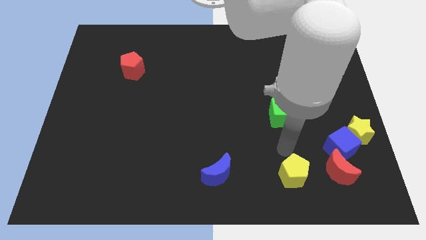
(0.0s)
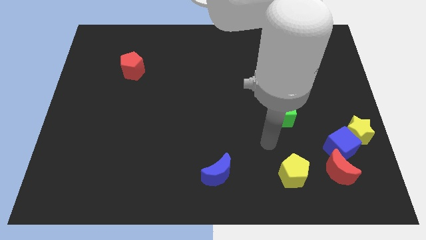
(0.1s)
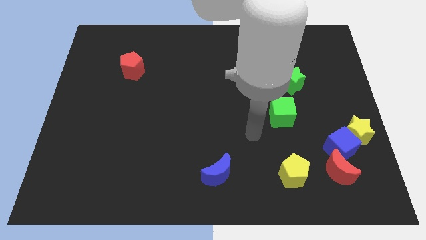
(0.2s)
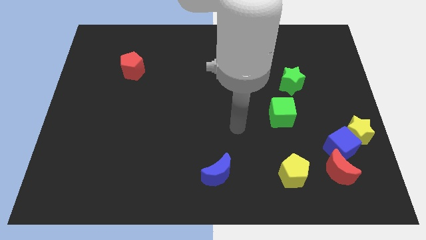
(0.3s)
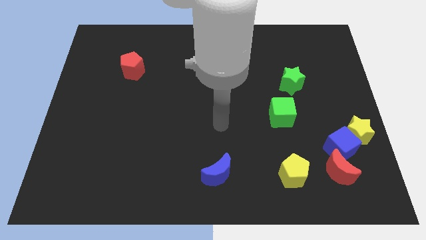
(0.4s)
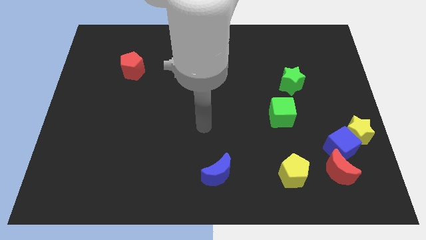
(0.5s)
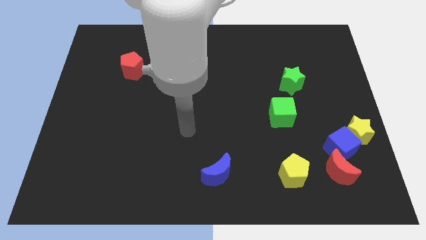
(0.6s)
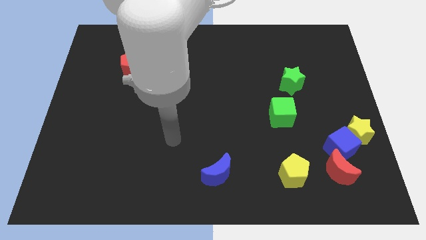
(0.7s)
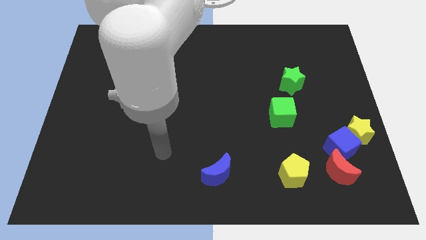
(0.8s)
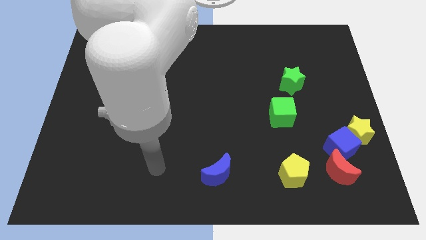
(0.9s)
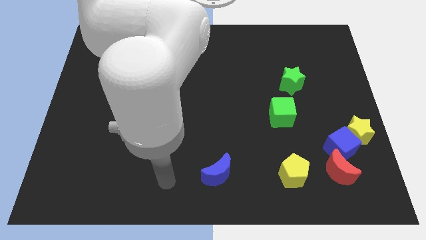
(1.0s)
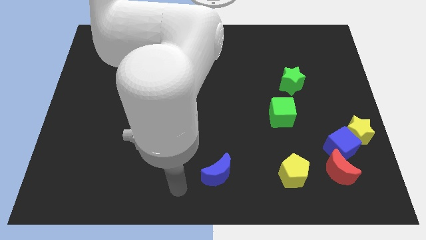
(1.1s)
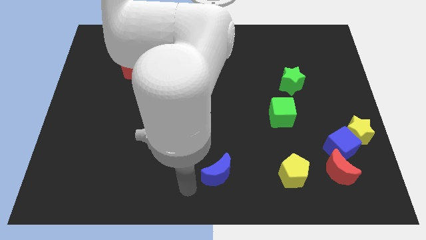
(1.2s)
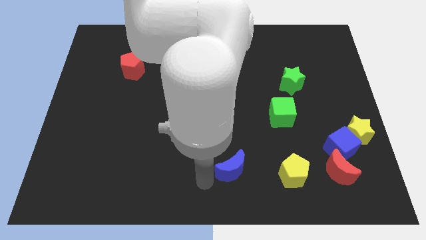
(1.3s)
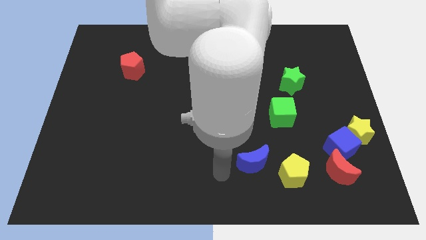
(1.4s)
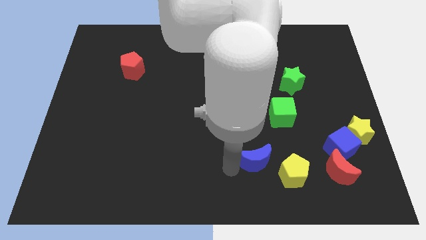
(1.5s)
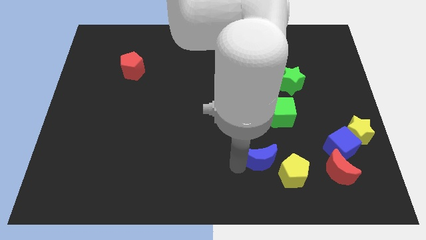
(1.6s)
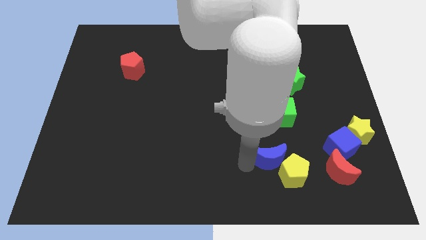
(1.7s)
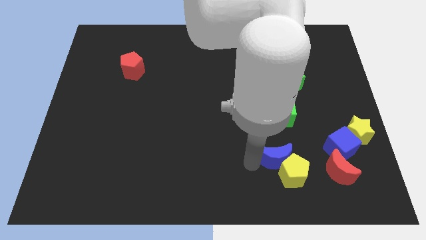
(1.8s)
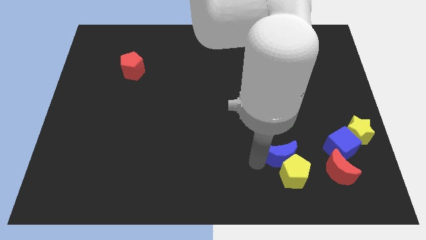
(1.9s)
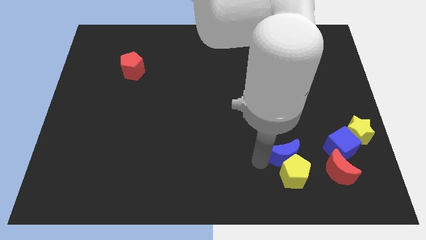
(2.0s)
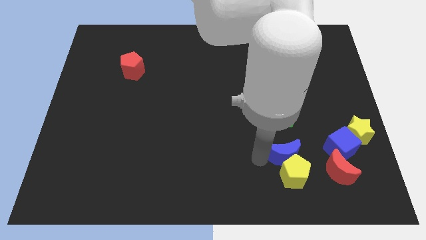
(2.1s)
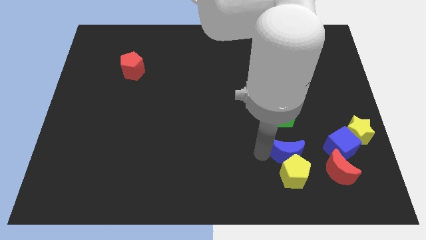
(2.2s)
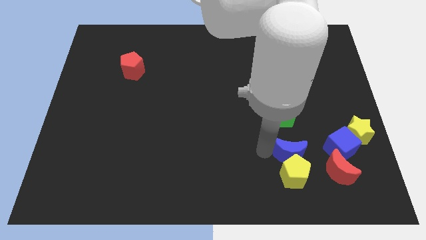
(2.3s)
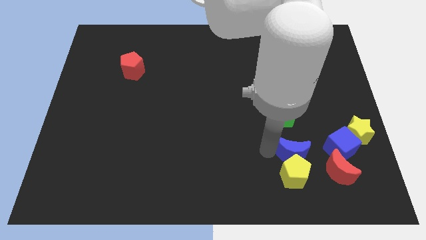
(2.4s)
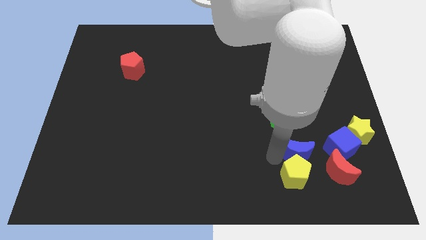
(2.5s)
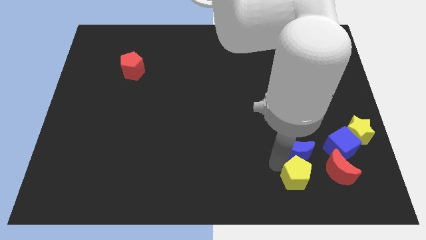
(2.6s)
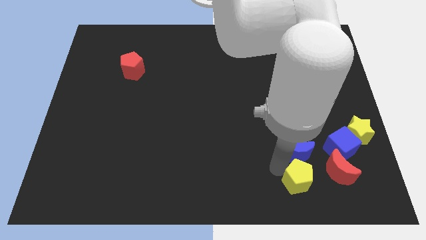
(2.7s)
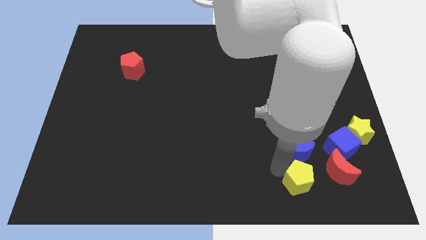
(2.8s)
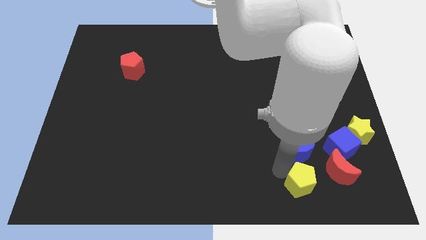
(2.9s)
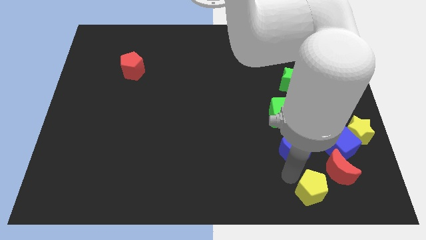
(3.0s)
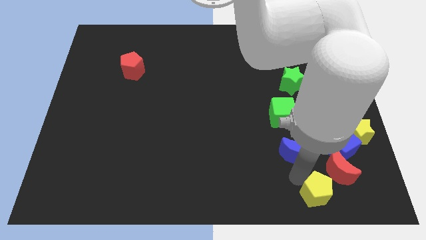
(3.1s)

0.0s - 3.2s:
place the blue moon in between green cube and yellow pentagon

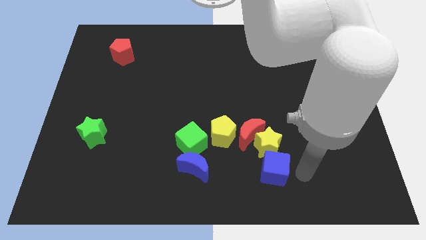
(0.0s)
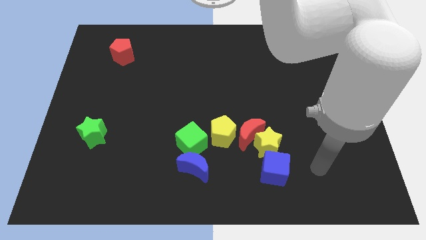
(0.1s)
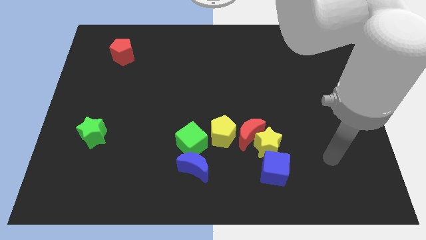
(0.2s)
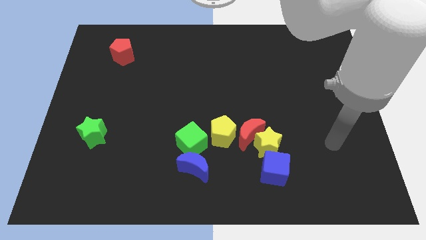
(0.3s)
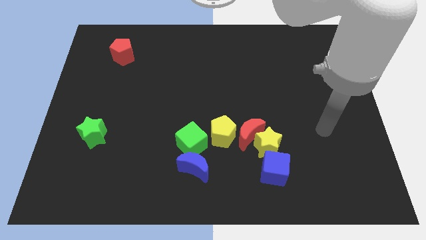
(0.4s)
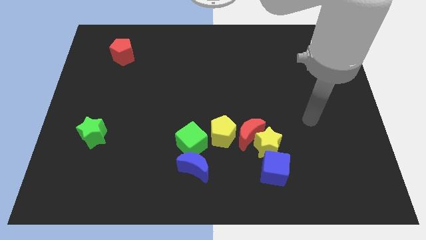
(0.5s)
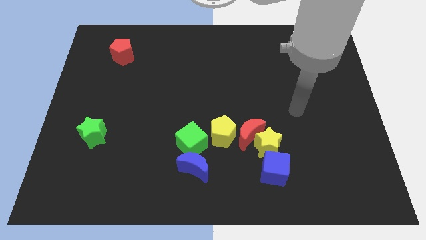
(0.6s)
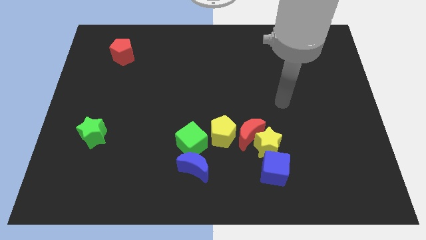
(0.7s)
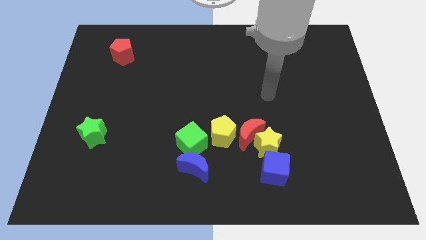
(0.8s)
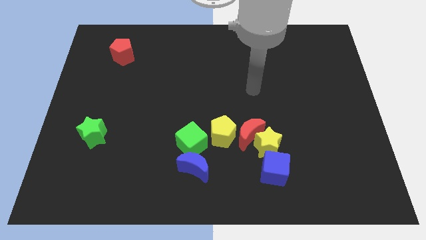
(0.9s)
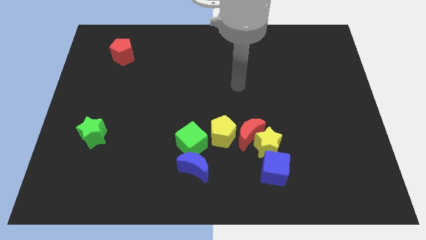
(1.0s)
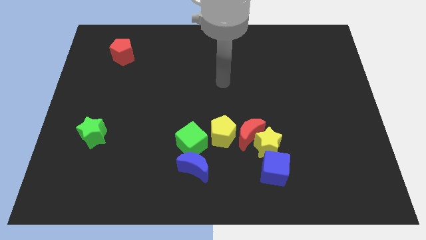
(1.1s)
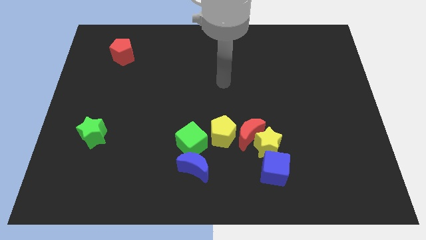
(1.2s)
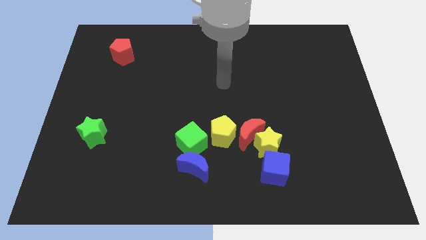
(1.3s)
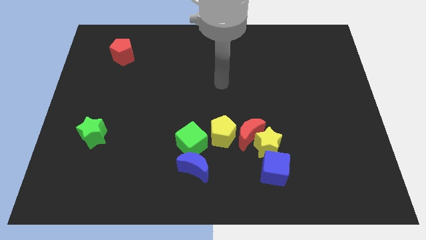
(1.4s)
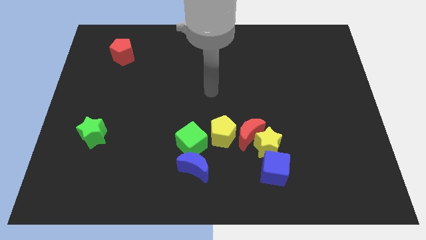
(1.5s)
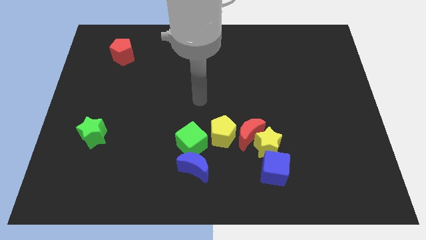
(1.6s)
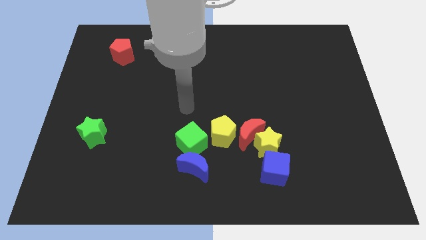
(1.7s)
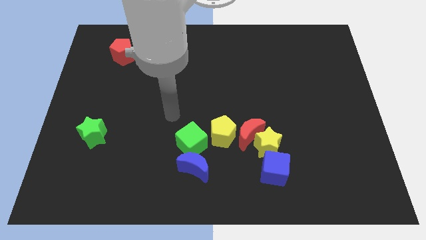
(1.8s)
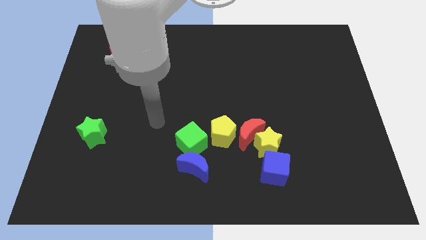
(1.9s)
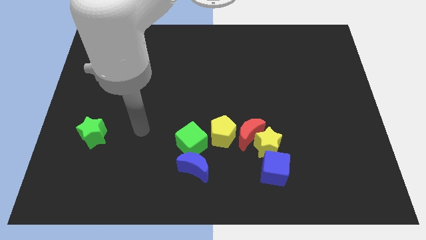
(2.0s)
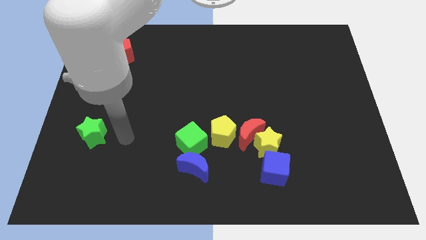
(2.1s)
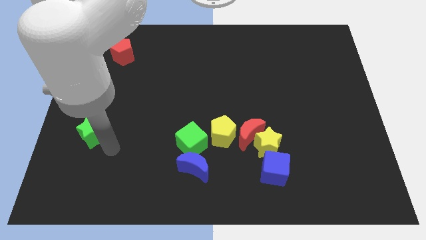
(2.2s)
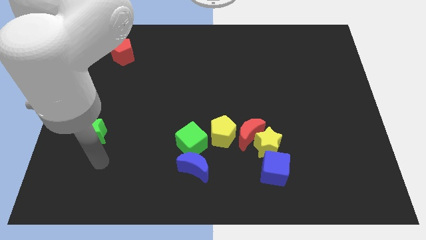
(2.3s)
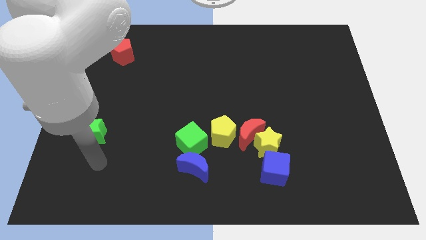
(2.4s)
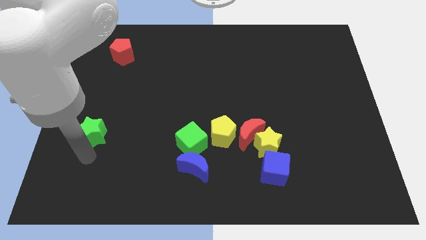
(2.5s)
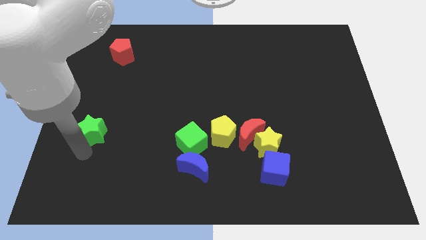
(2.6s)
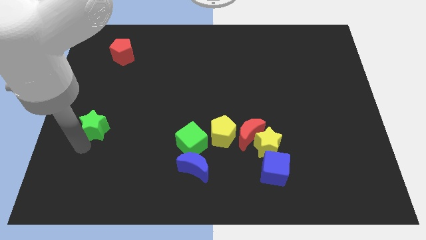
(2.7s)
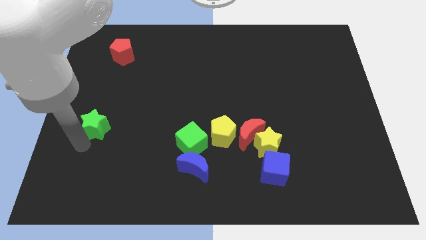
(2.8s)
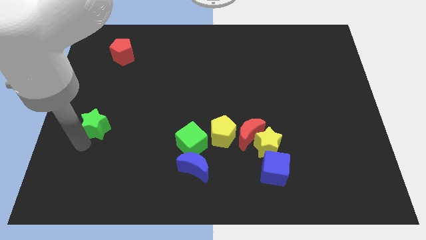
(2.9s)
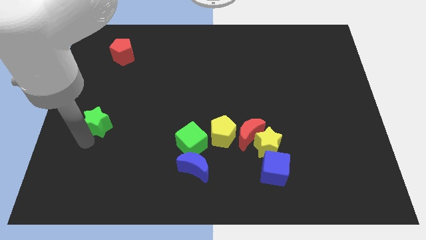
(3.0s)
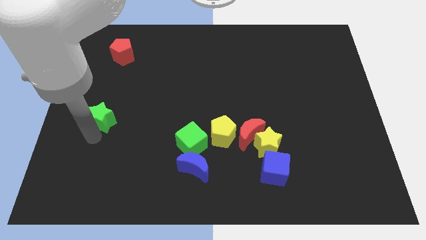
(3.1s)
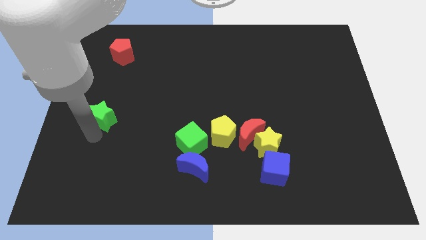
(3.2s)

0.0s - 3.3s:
move your arm and slightly push the green star upwards

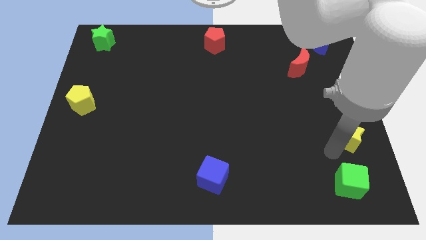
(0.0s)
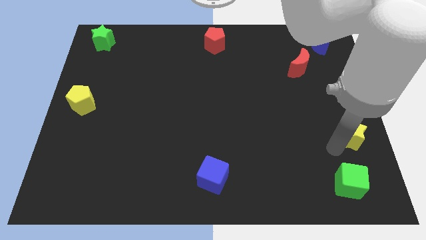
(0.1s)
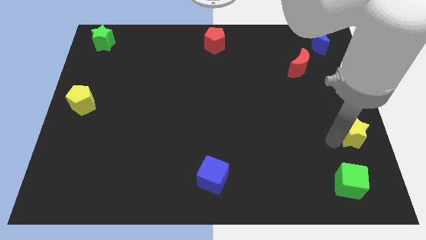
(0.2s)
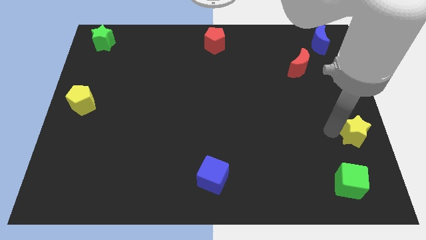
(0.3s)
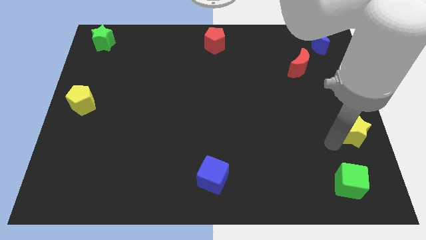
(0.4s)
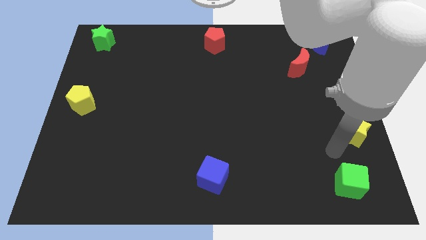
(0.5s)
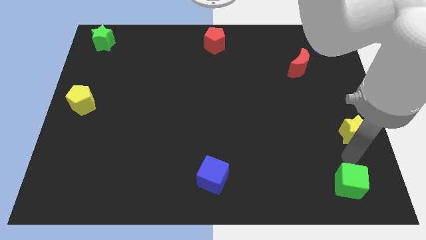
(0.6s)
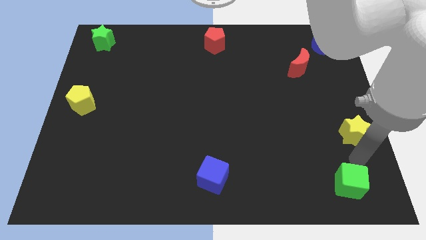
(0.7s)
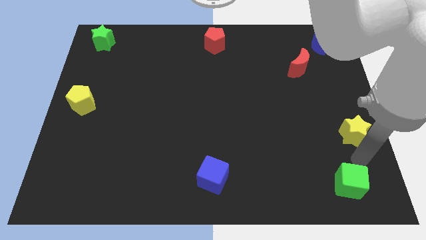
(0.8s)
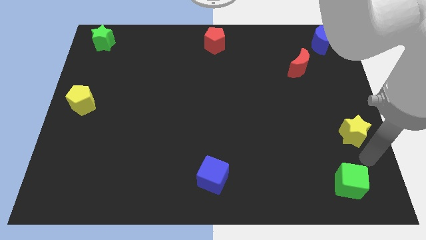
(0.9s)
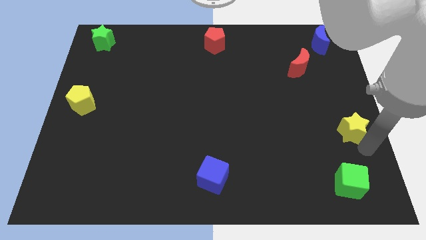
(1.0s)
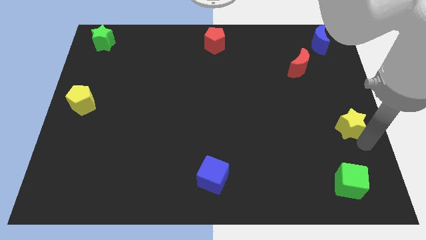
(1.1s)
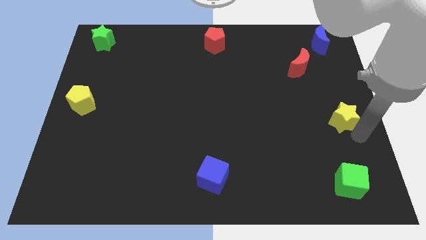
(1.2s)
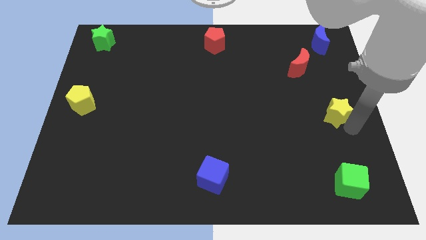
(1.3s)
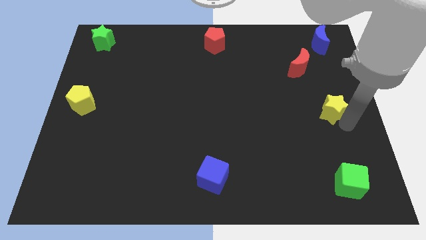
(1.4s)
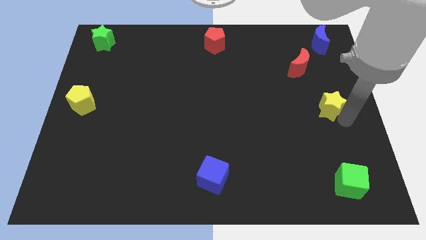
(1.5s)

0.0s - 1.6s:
push the yellow star towards up

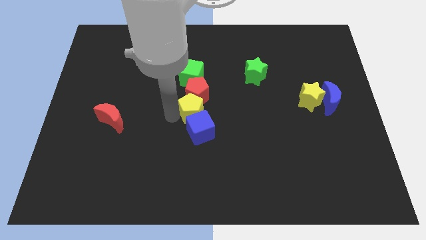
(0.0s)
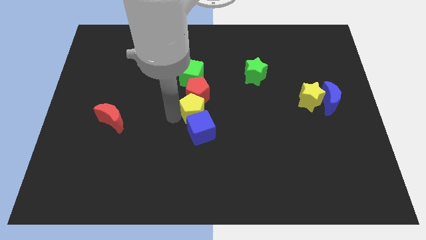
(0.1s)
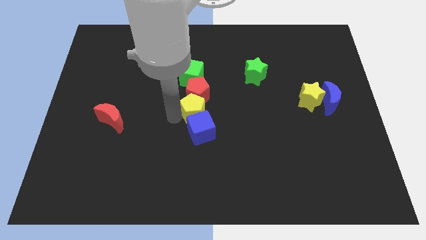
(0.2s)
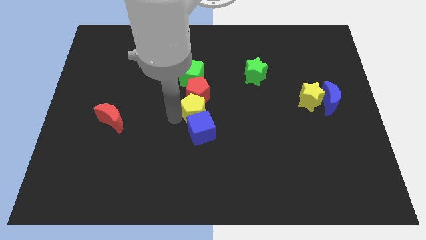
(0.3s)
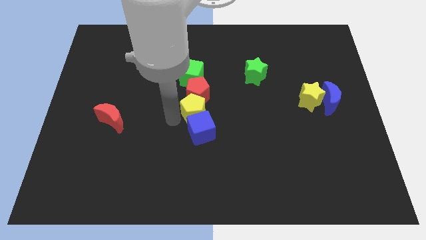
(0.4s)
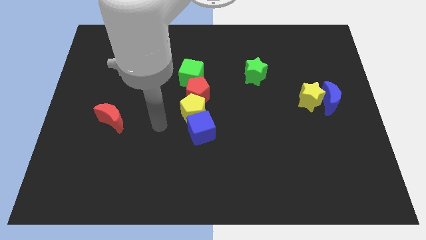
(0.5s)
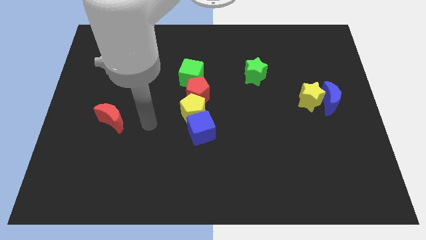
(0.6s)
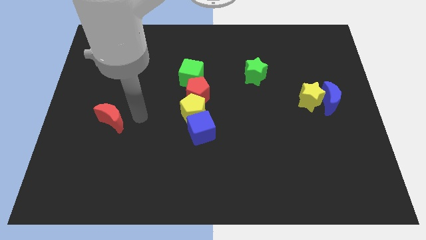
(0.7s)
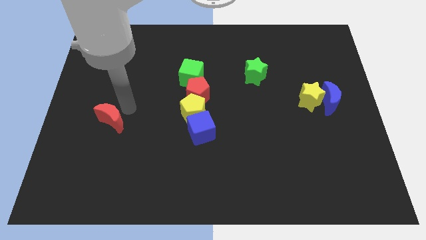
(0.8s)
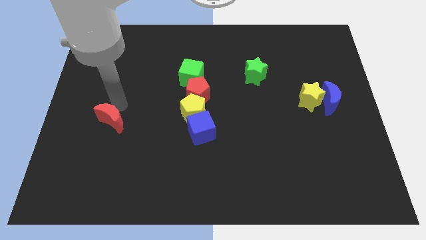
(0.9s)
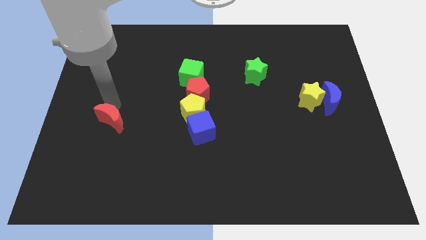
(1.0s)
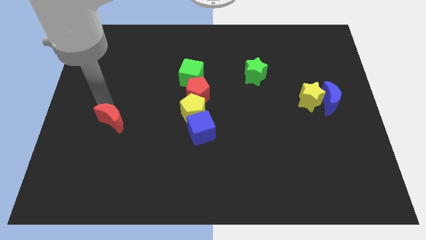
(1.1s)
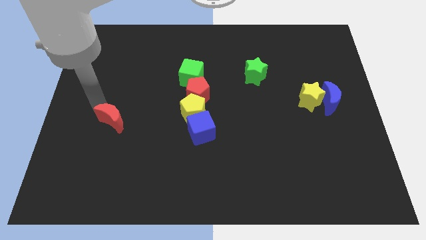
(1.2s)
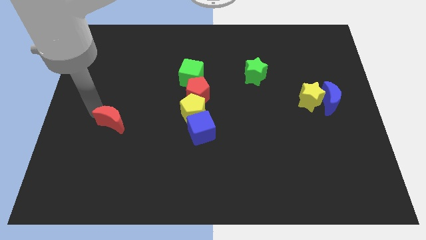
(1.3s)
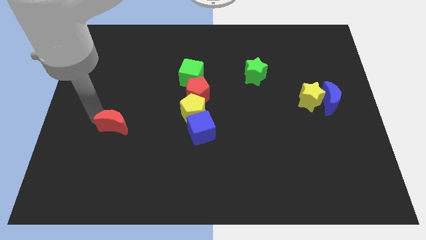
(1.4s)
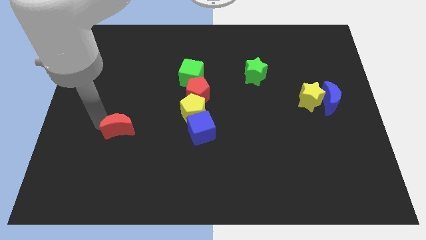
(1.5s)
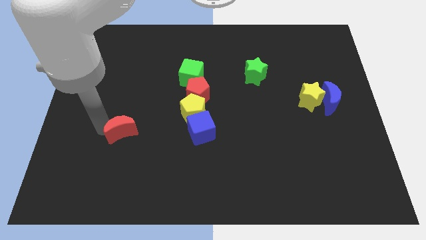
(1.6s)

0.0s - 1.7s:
push the red crescent towards right
